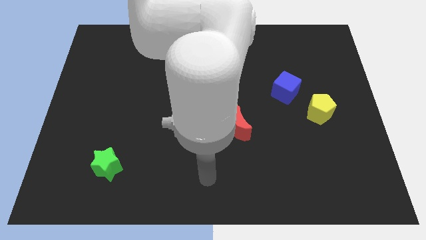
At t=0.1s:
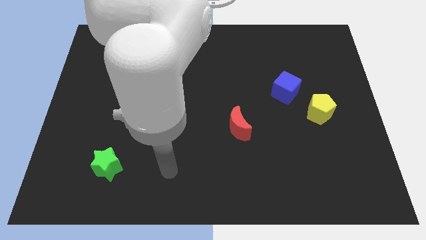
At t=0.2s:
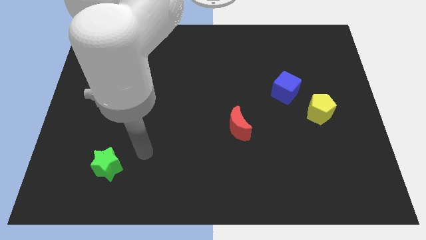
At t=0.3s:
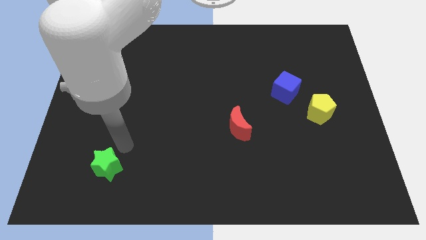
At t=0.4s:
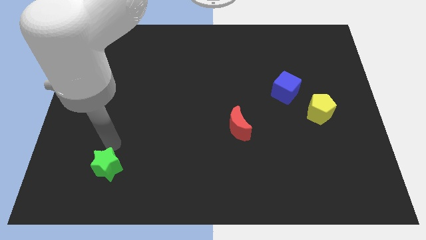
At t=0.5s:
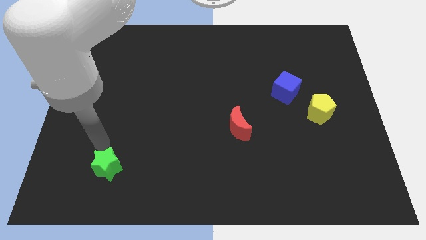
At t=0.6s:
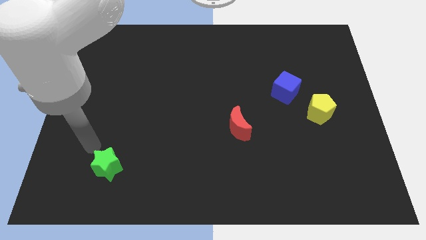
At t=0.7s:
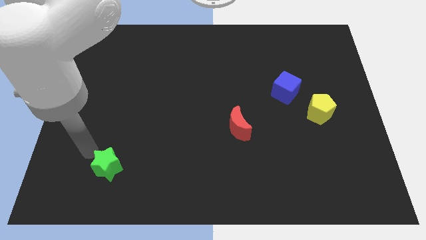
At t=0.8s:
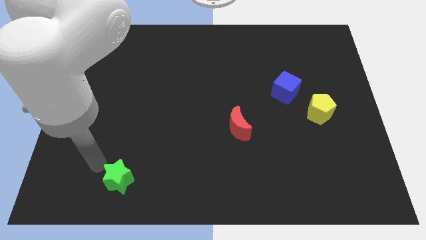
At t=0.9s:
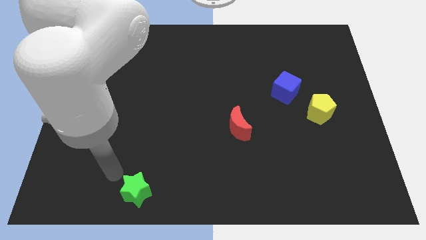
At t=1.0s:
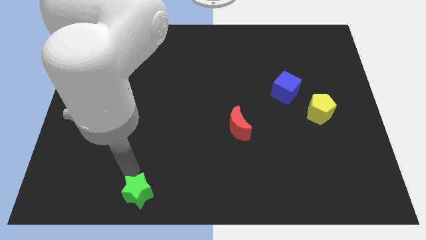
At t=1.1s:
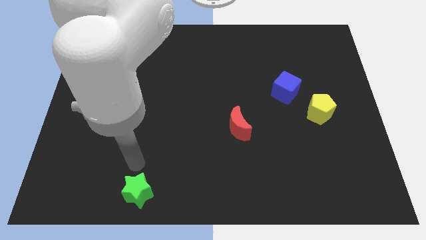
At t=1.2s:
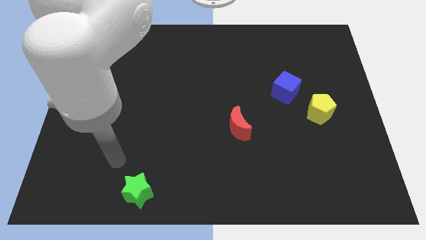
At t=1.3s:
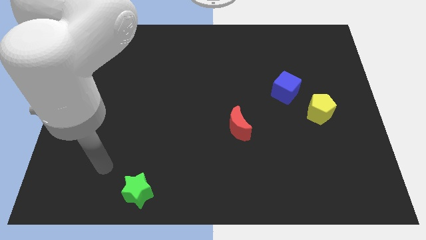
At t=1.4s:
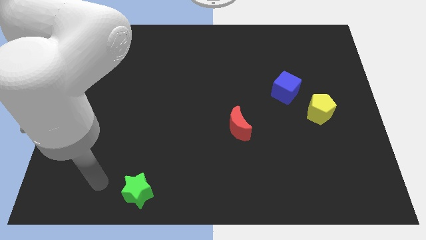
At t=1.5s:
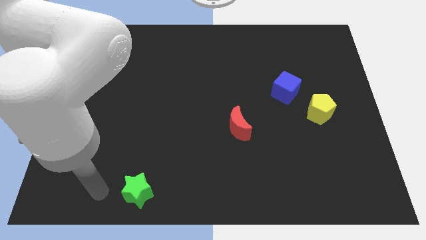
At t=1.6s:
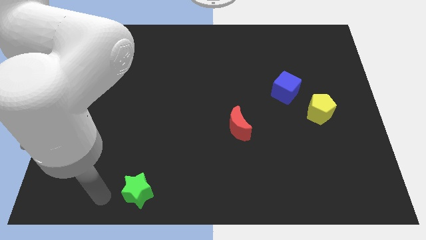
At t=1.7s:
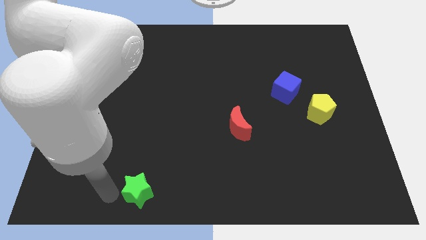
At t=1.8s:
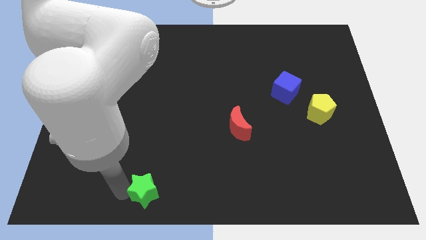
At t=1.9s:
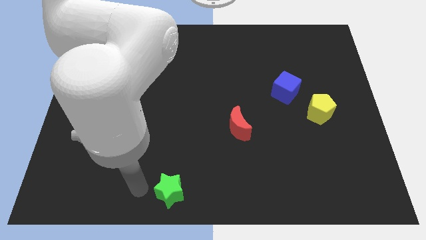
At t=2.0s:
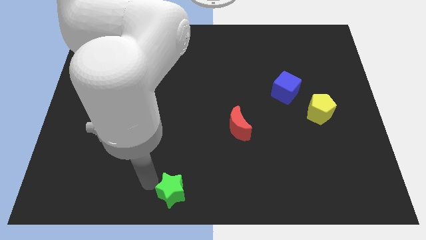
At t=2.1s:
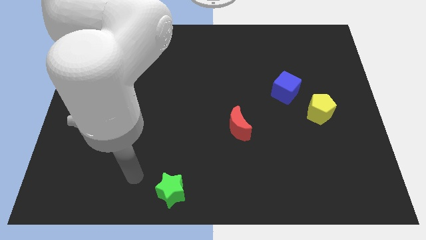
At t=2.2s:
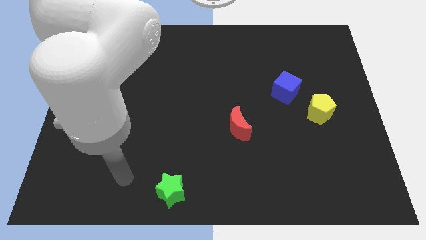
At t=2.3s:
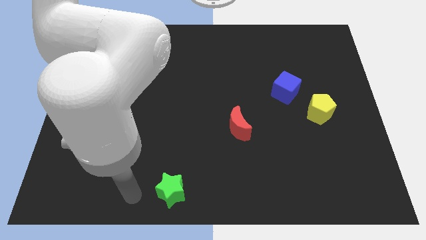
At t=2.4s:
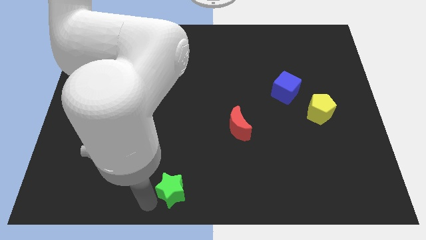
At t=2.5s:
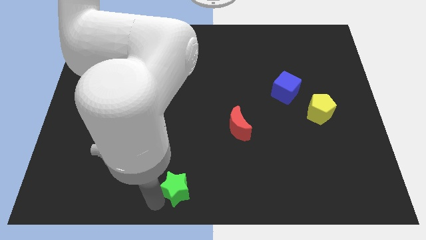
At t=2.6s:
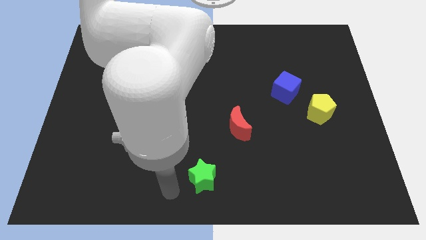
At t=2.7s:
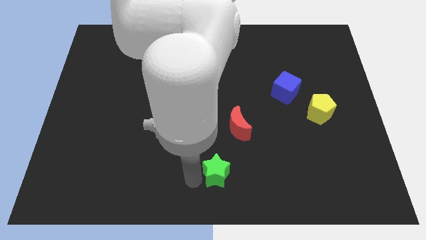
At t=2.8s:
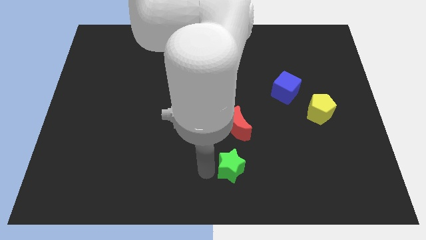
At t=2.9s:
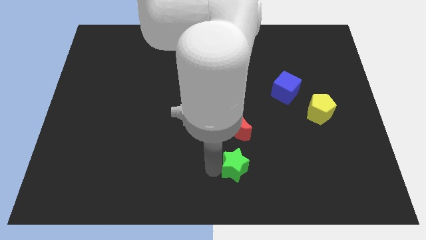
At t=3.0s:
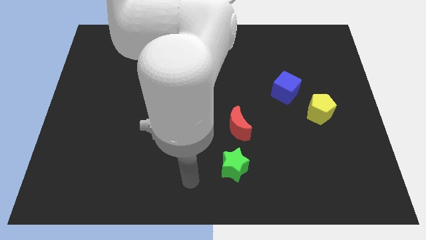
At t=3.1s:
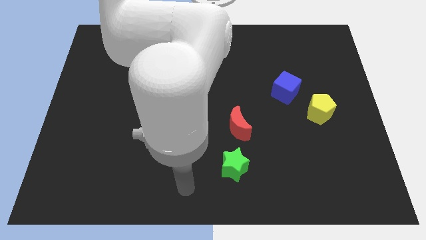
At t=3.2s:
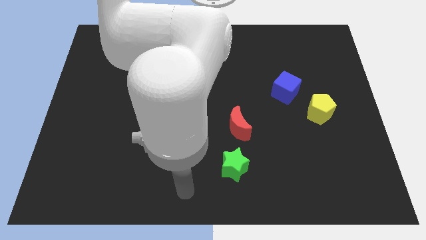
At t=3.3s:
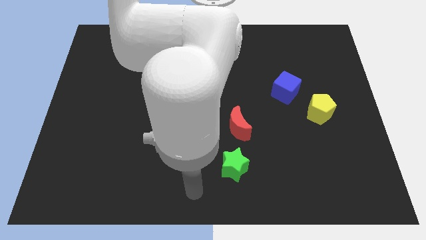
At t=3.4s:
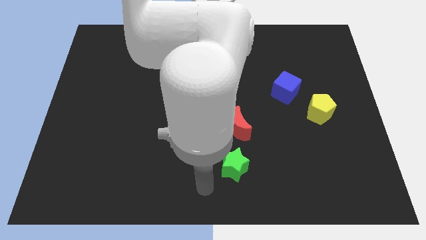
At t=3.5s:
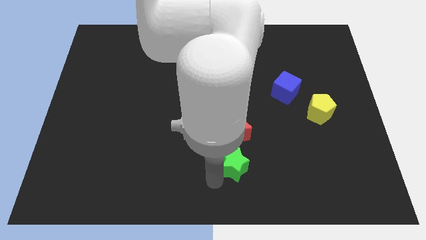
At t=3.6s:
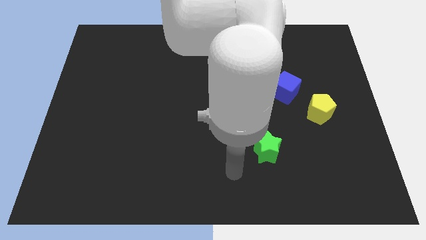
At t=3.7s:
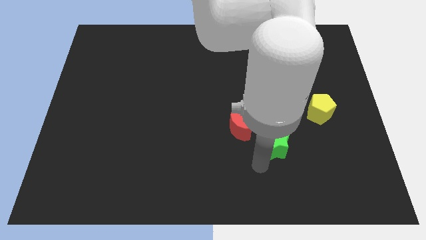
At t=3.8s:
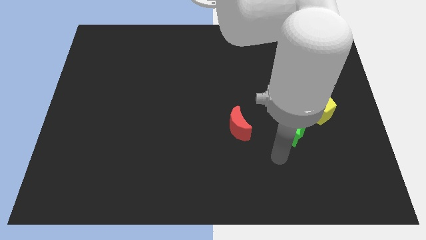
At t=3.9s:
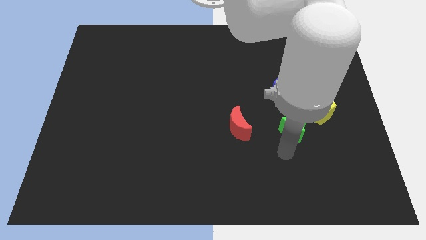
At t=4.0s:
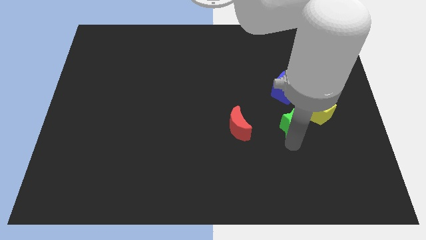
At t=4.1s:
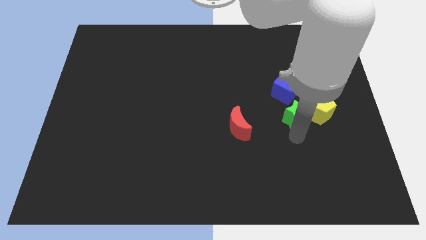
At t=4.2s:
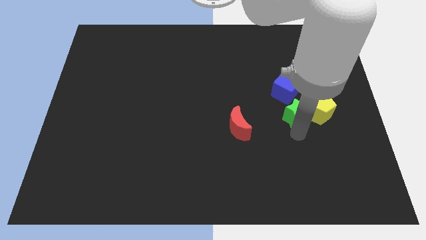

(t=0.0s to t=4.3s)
push the green star close to the yellow block

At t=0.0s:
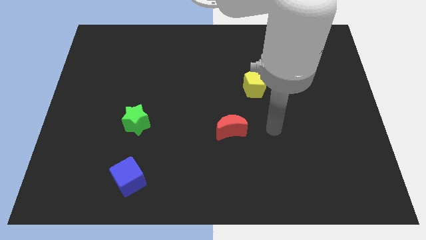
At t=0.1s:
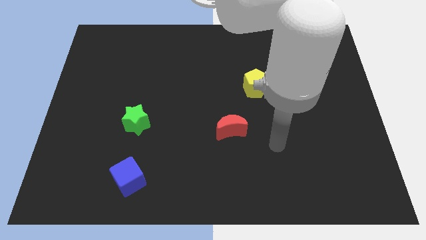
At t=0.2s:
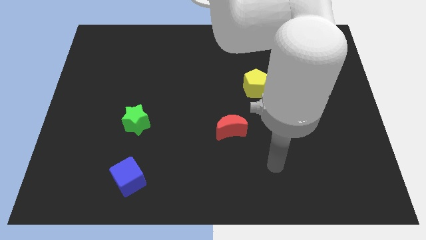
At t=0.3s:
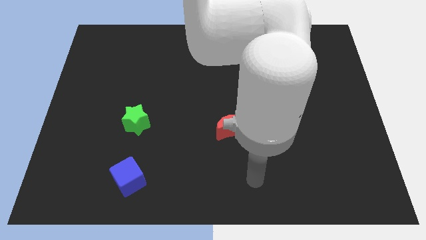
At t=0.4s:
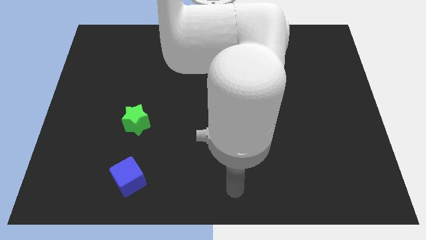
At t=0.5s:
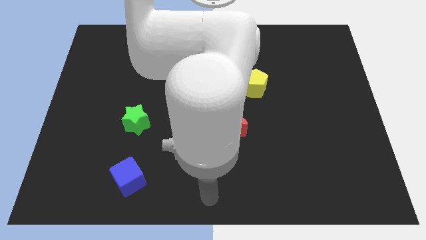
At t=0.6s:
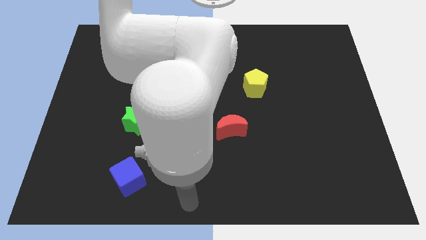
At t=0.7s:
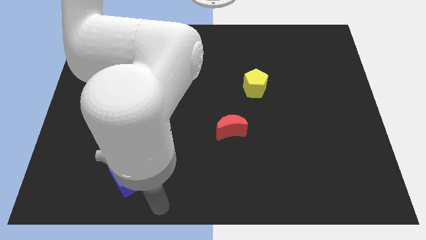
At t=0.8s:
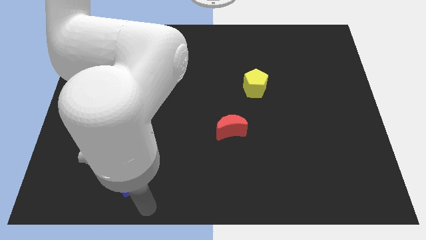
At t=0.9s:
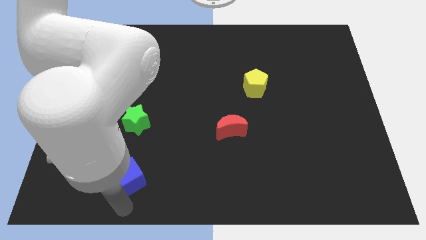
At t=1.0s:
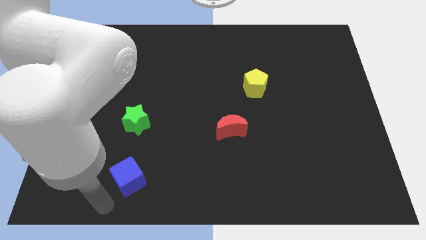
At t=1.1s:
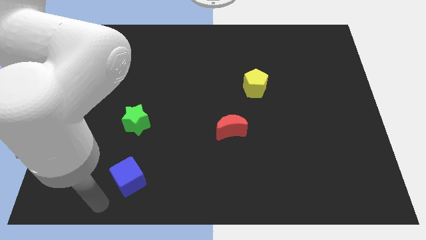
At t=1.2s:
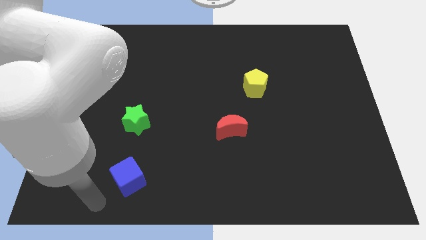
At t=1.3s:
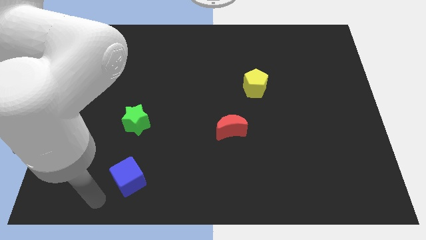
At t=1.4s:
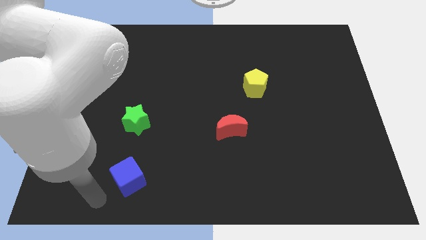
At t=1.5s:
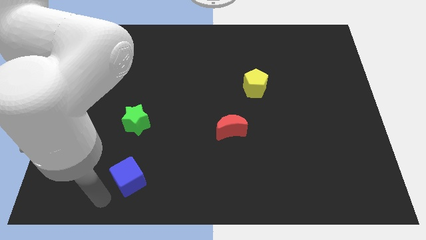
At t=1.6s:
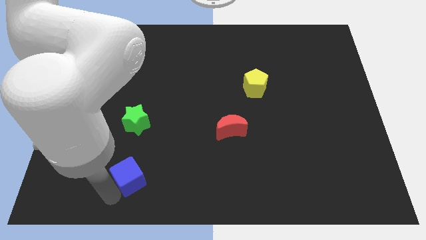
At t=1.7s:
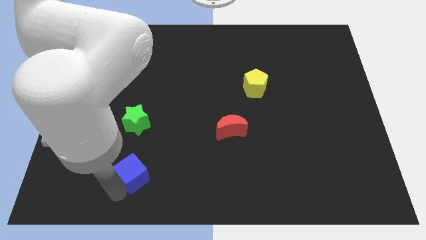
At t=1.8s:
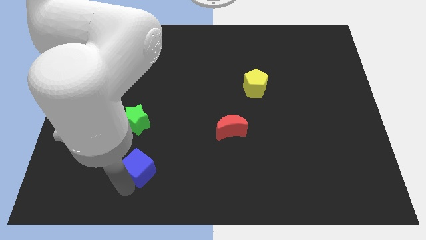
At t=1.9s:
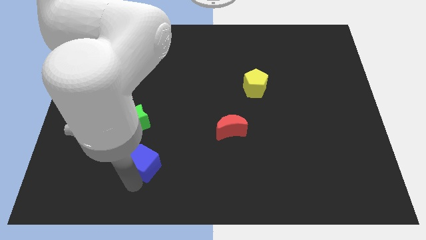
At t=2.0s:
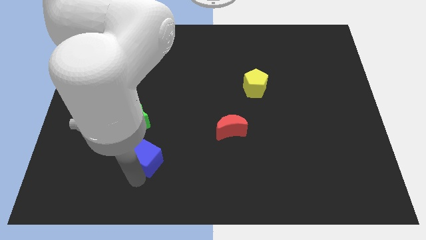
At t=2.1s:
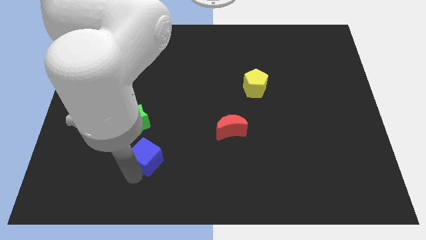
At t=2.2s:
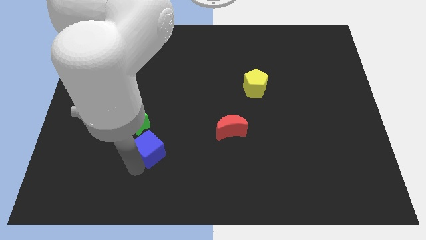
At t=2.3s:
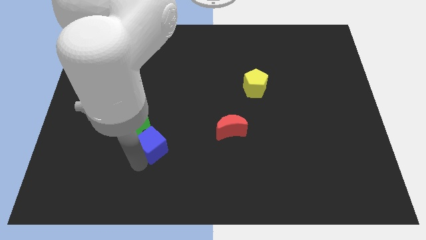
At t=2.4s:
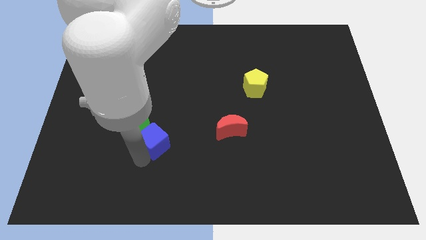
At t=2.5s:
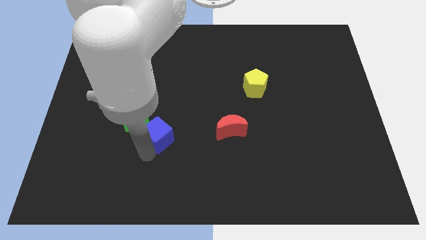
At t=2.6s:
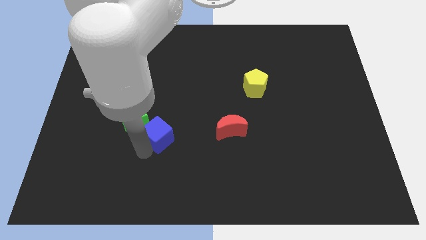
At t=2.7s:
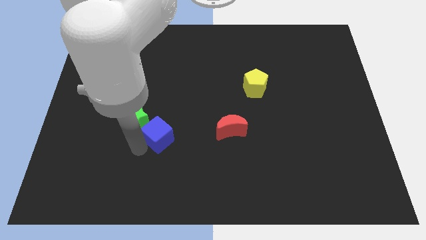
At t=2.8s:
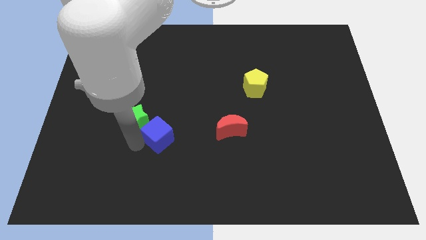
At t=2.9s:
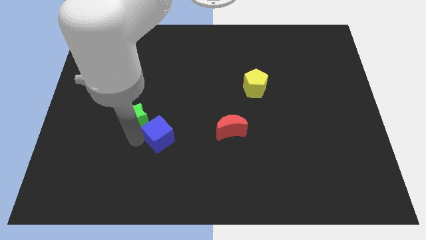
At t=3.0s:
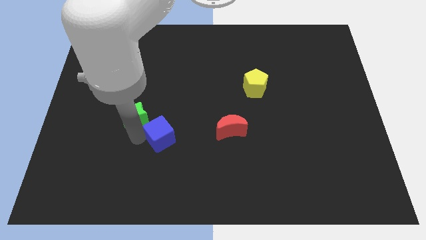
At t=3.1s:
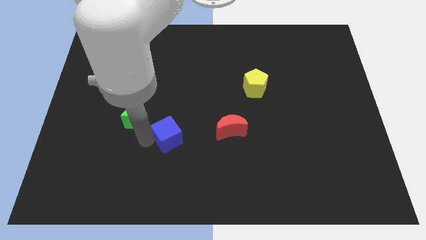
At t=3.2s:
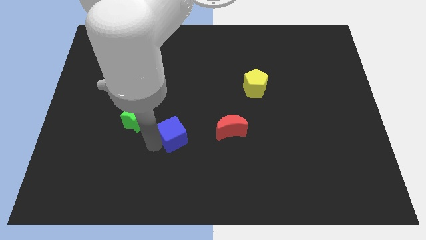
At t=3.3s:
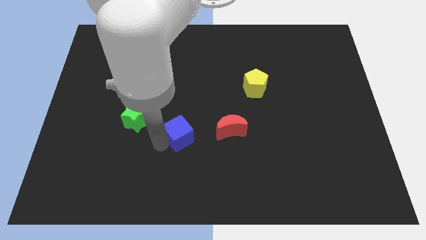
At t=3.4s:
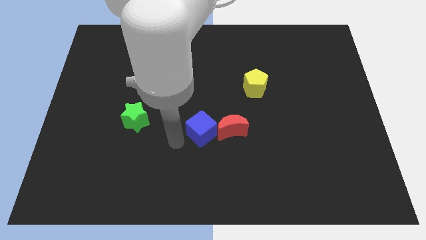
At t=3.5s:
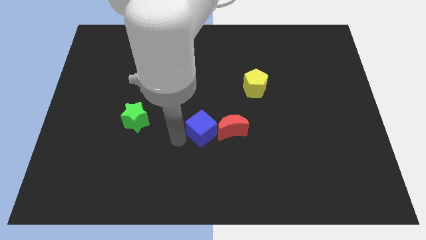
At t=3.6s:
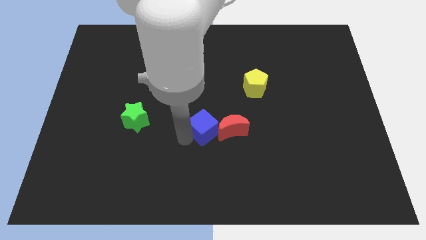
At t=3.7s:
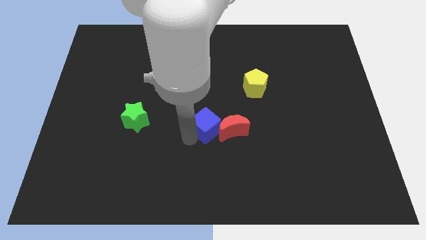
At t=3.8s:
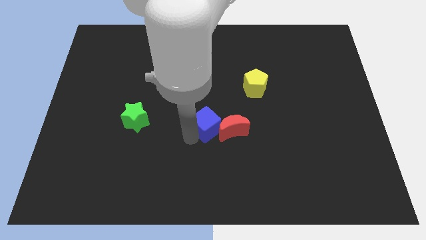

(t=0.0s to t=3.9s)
push the cube to the moon

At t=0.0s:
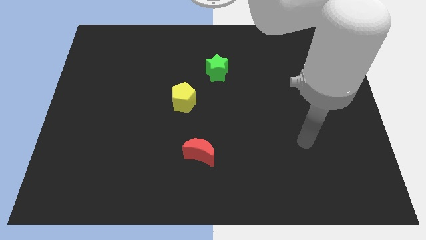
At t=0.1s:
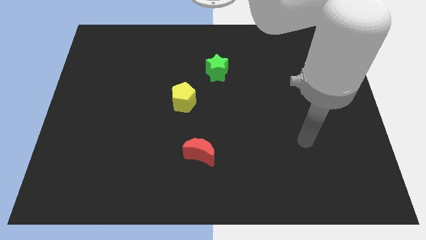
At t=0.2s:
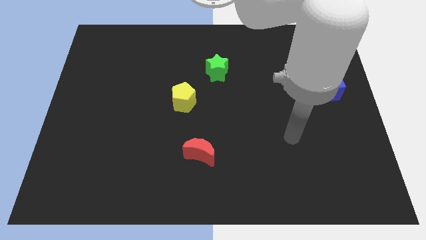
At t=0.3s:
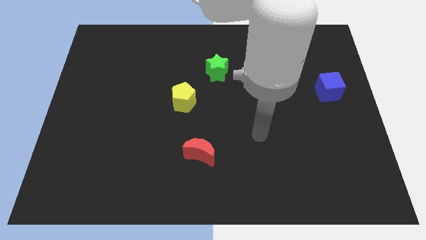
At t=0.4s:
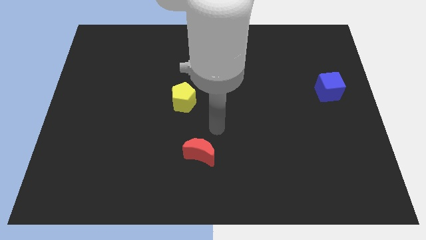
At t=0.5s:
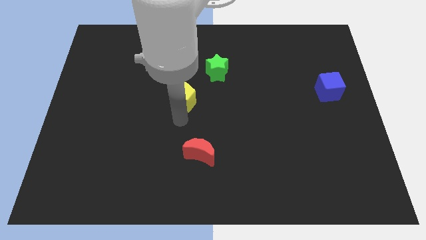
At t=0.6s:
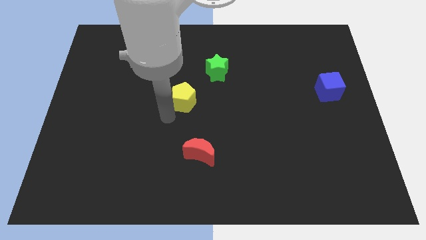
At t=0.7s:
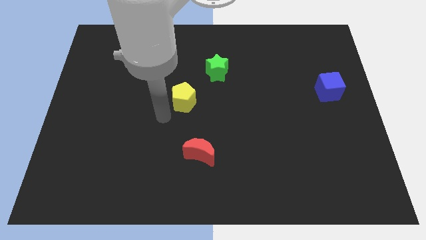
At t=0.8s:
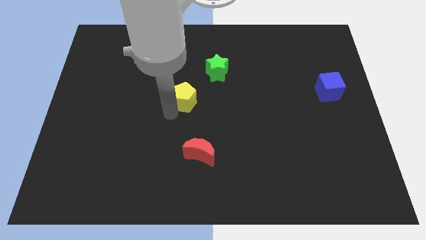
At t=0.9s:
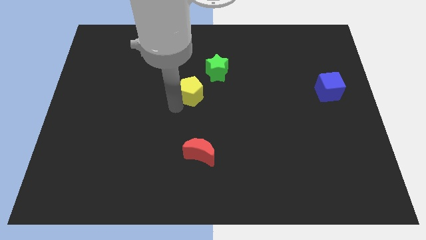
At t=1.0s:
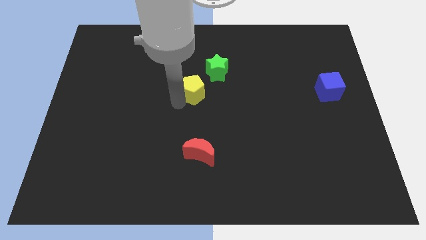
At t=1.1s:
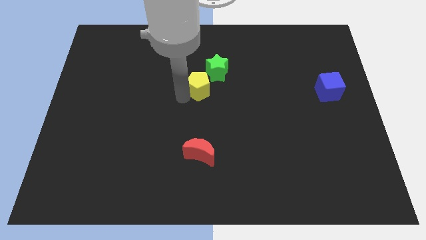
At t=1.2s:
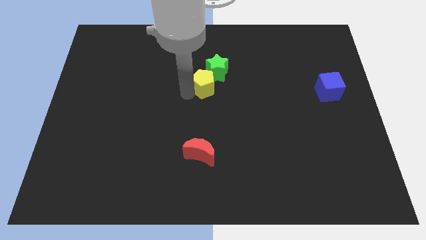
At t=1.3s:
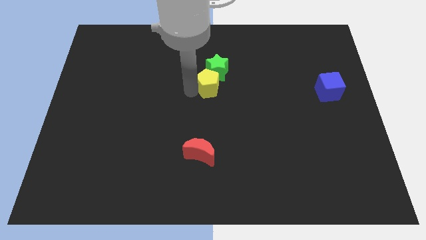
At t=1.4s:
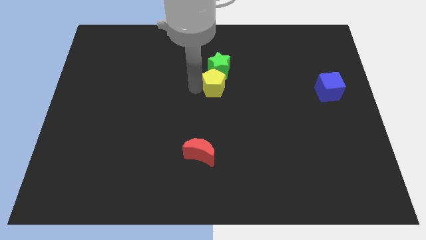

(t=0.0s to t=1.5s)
move the pentagon to the green block
